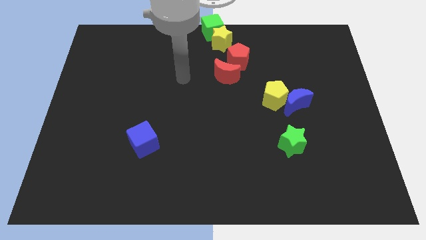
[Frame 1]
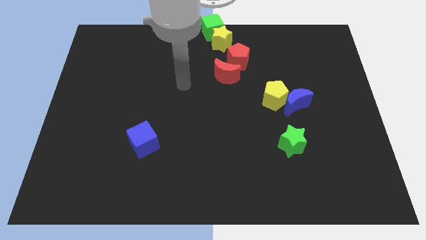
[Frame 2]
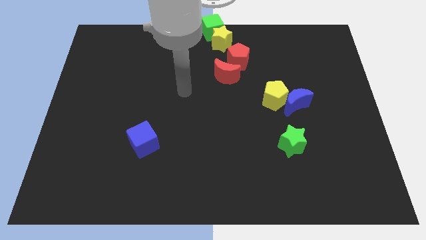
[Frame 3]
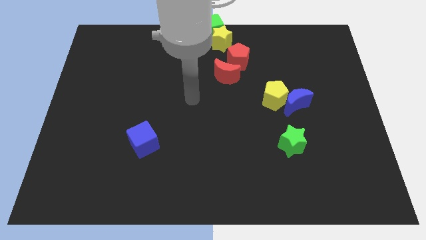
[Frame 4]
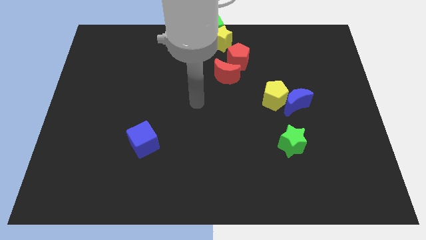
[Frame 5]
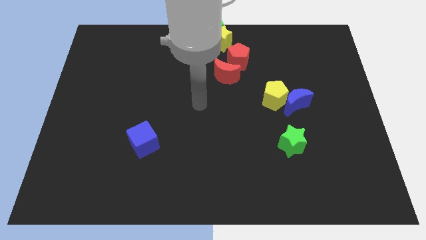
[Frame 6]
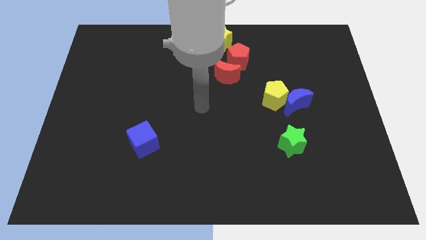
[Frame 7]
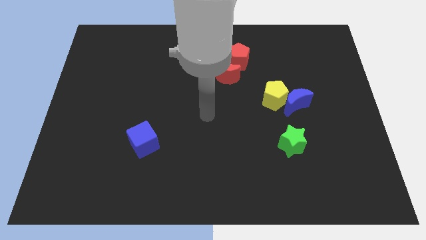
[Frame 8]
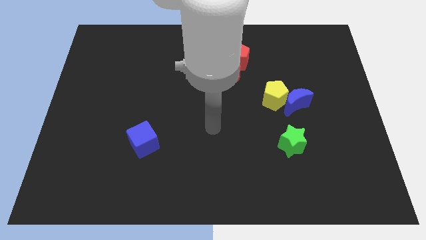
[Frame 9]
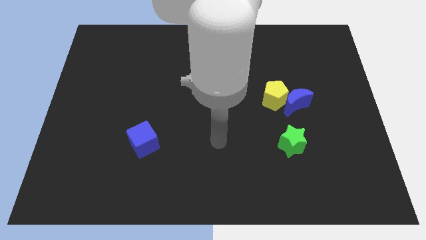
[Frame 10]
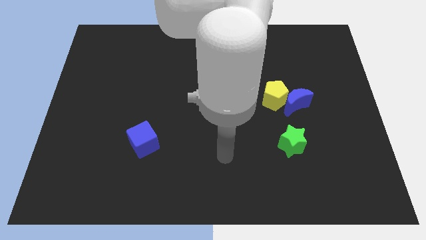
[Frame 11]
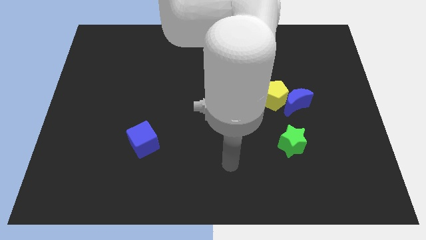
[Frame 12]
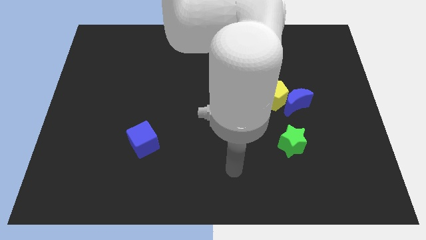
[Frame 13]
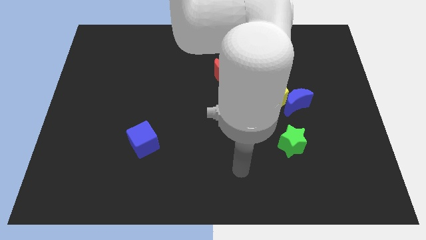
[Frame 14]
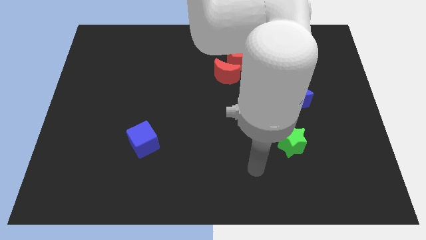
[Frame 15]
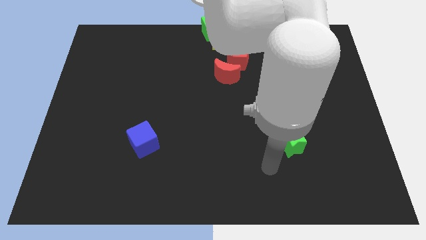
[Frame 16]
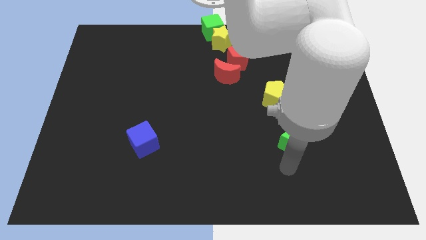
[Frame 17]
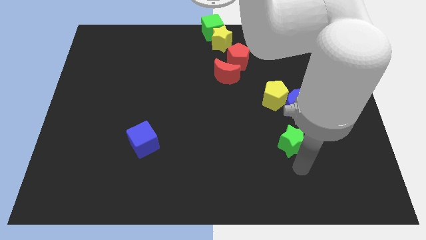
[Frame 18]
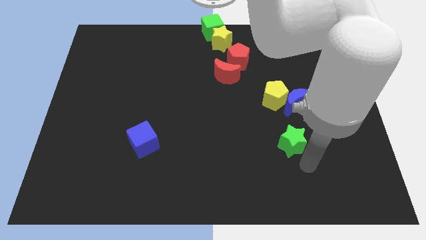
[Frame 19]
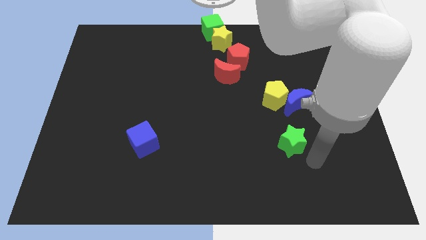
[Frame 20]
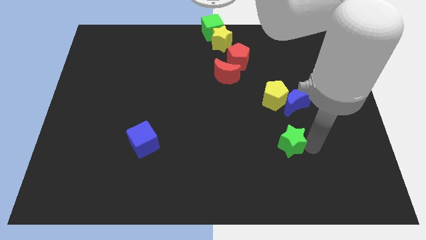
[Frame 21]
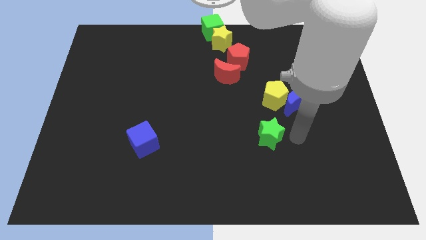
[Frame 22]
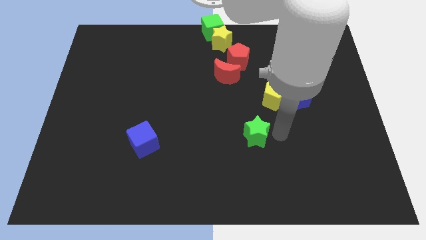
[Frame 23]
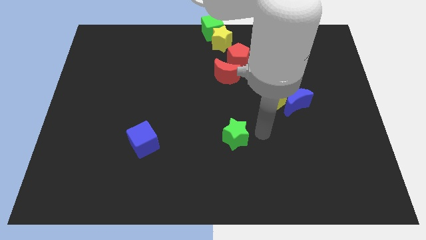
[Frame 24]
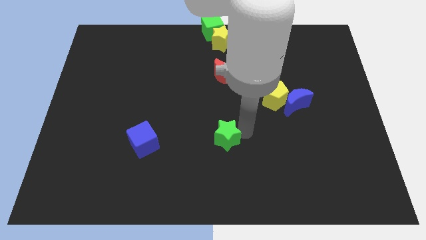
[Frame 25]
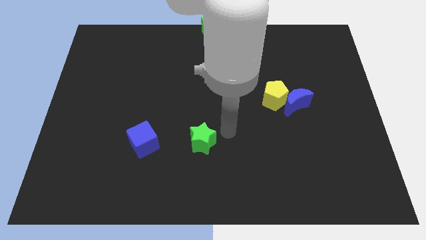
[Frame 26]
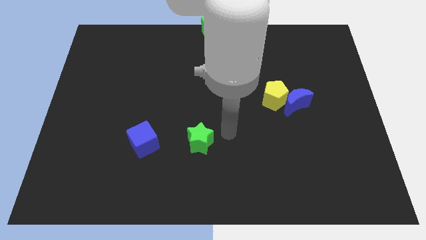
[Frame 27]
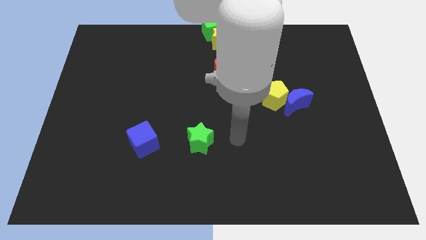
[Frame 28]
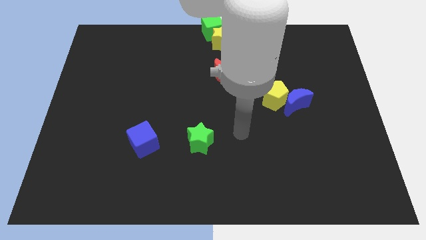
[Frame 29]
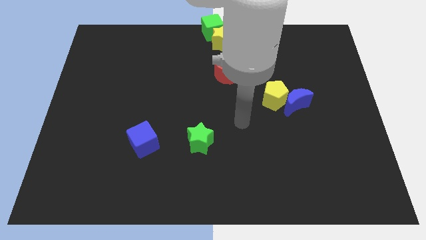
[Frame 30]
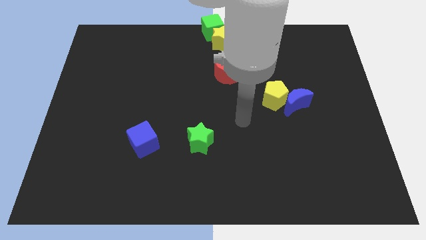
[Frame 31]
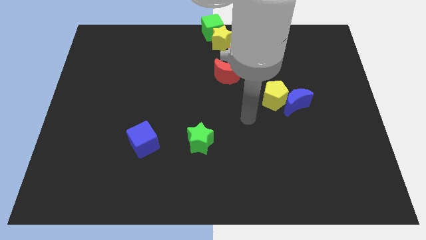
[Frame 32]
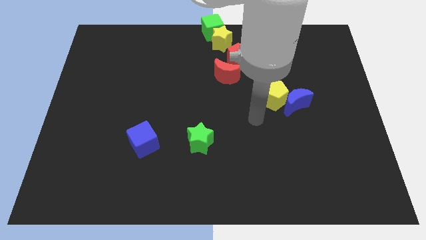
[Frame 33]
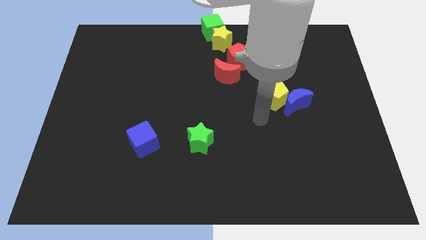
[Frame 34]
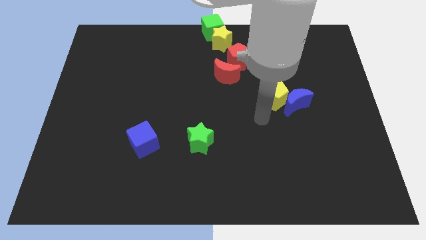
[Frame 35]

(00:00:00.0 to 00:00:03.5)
move the green star to the right of the blue cube

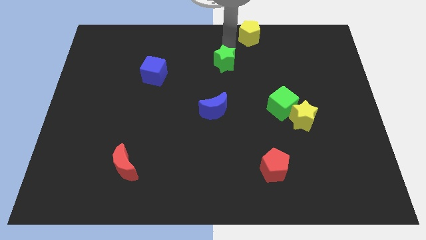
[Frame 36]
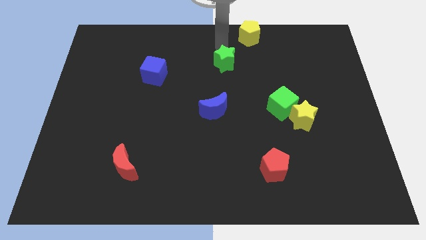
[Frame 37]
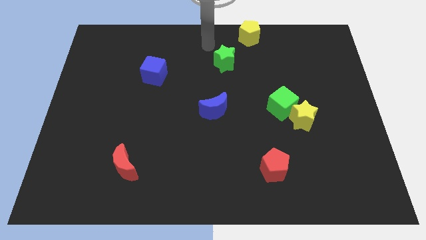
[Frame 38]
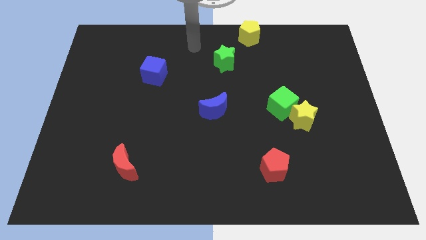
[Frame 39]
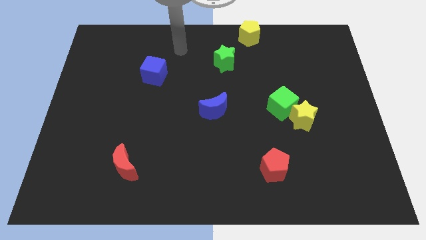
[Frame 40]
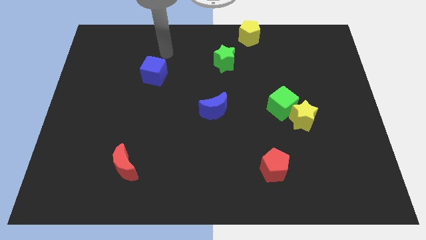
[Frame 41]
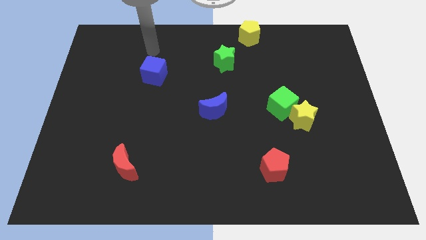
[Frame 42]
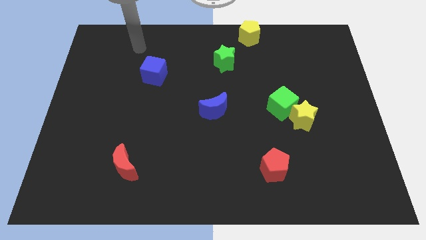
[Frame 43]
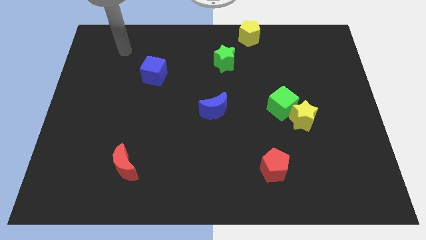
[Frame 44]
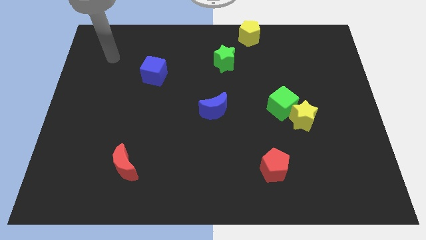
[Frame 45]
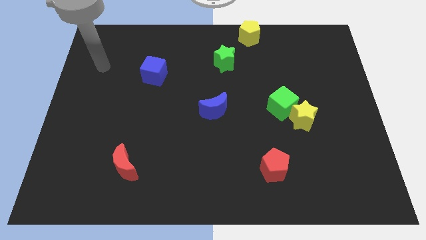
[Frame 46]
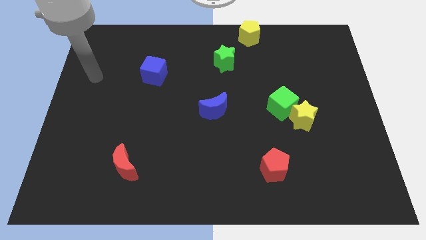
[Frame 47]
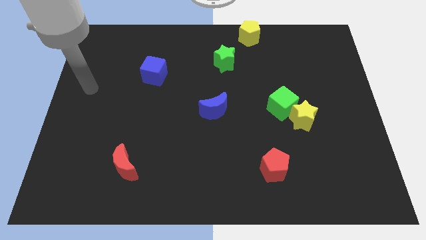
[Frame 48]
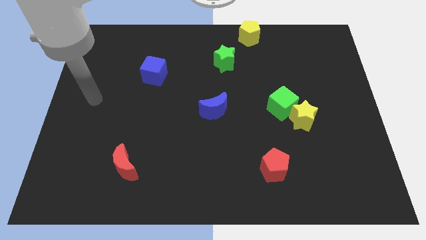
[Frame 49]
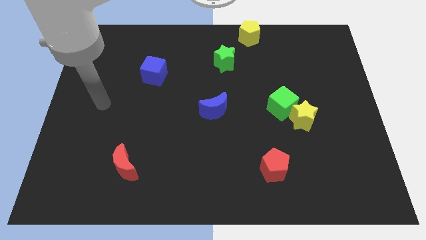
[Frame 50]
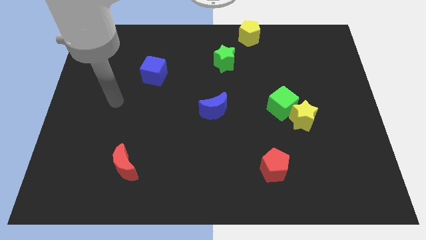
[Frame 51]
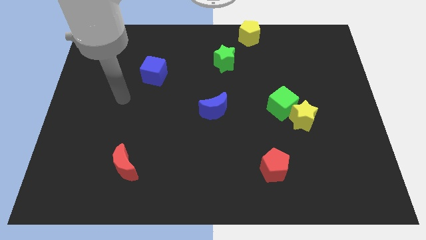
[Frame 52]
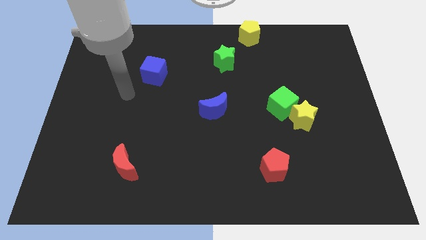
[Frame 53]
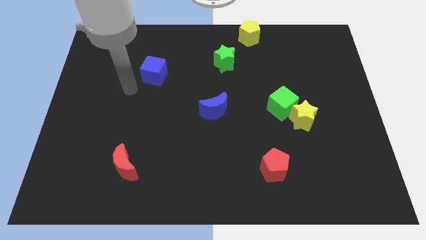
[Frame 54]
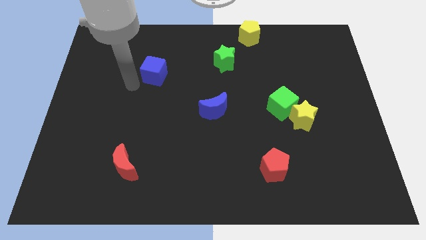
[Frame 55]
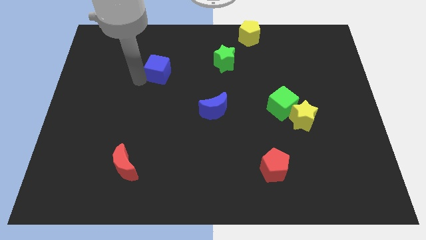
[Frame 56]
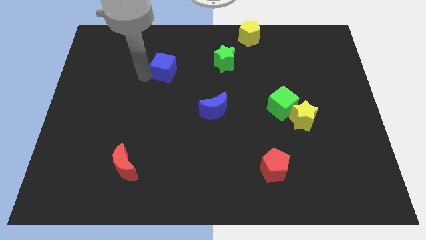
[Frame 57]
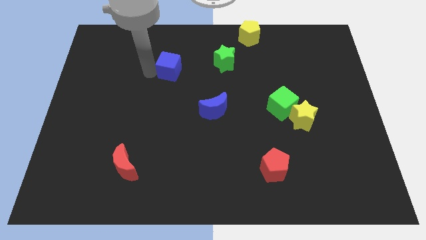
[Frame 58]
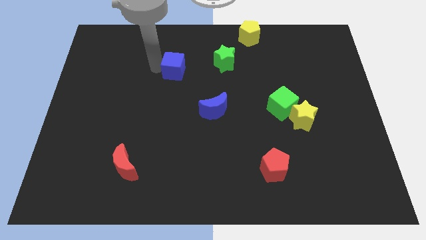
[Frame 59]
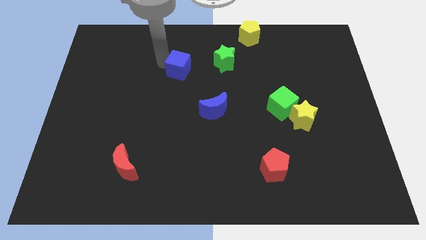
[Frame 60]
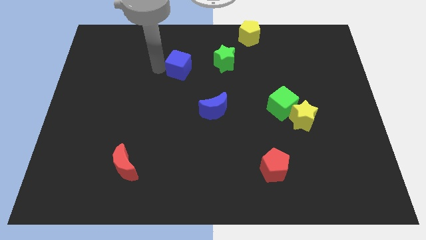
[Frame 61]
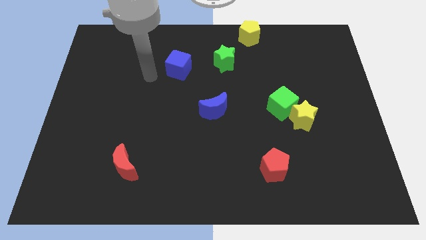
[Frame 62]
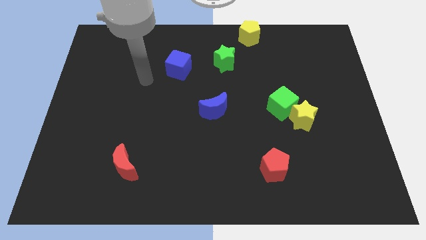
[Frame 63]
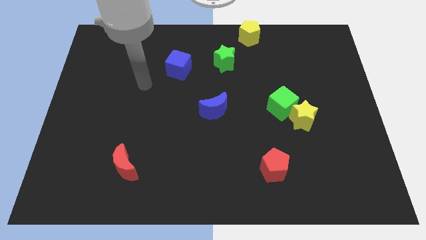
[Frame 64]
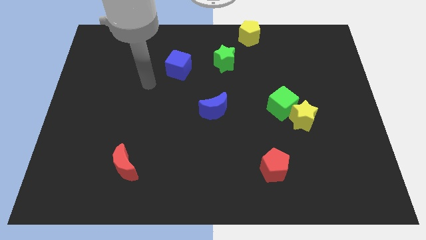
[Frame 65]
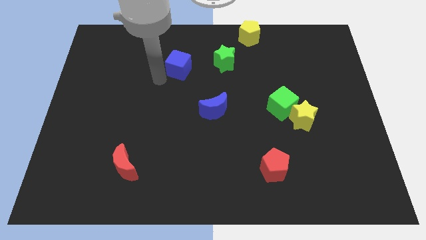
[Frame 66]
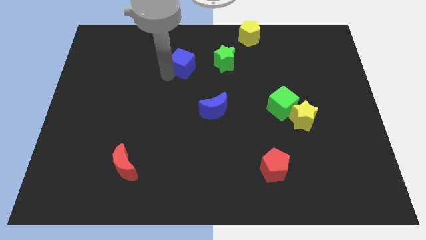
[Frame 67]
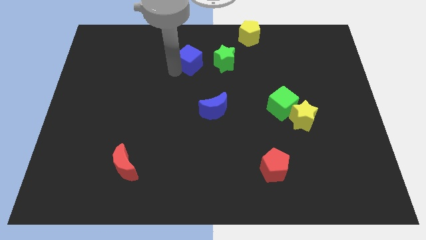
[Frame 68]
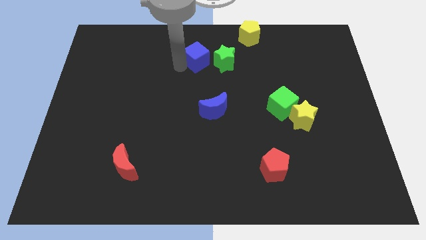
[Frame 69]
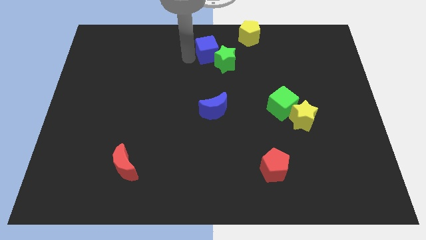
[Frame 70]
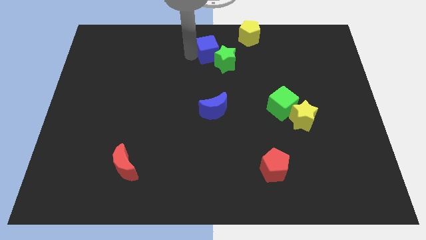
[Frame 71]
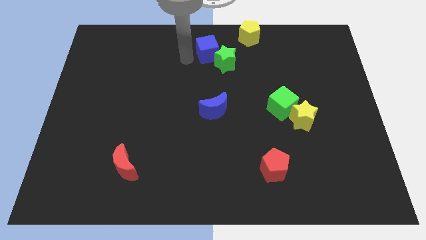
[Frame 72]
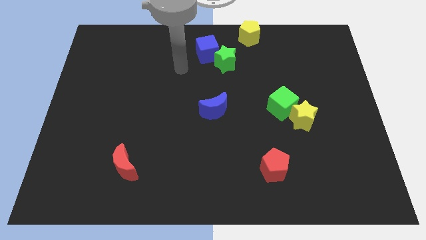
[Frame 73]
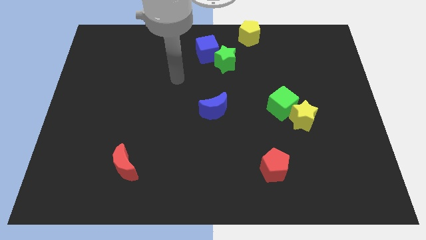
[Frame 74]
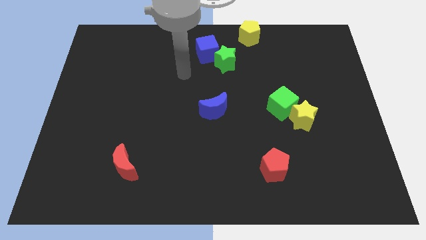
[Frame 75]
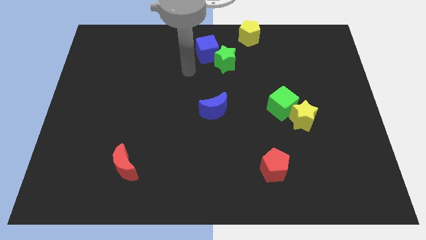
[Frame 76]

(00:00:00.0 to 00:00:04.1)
move the blue cube into the green star

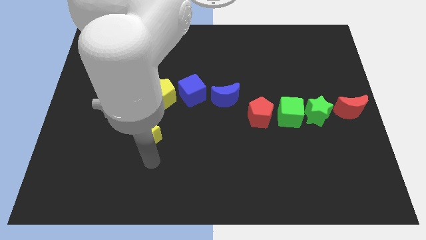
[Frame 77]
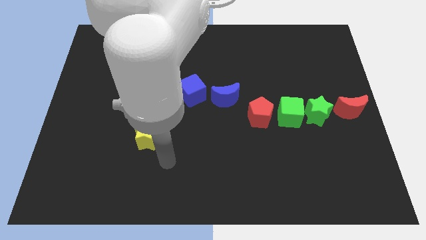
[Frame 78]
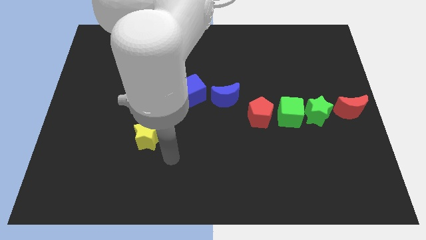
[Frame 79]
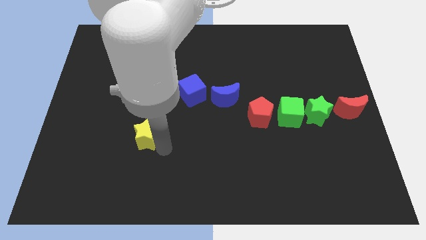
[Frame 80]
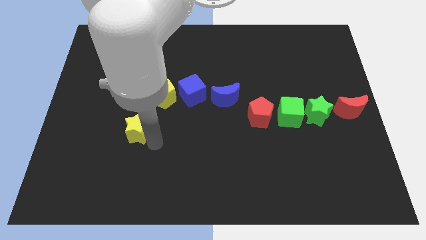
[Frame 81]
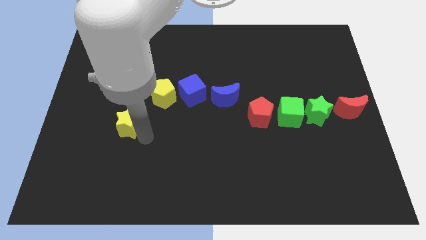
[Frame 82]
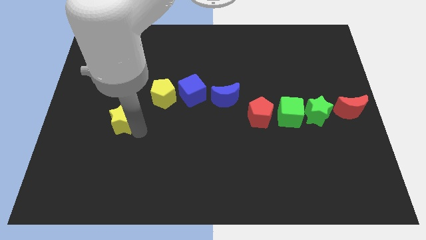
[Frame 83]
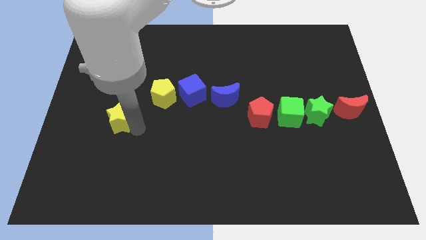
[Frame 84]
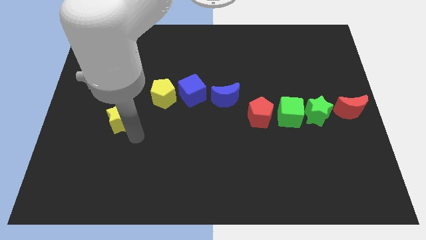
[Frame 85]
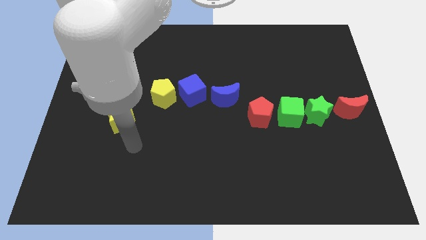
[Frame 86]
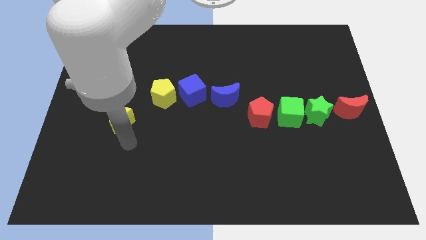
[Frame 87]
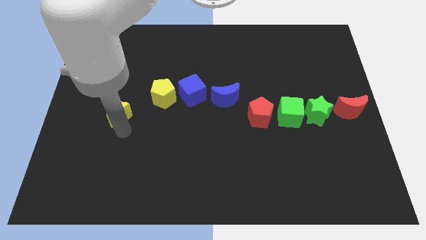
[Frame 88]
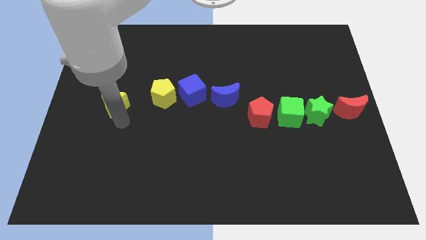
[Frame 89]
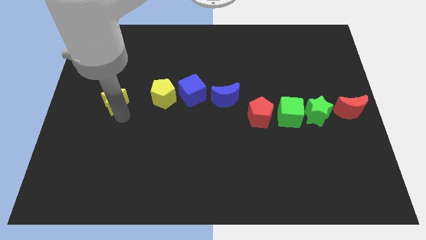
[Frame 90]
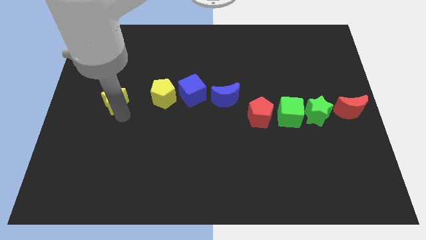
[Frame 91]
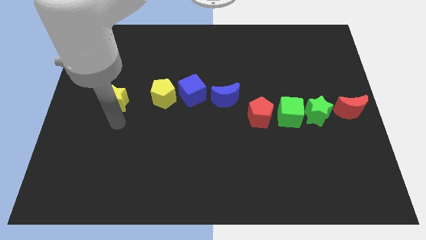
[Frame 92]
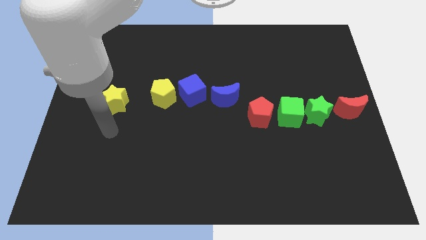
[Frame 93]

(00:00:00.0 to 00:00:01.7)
move the yellow star left to the yellow pentagon
